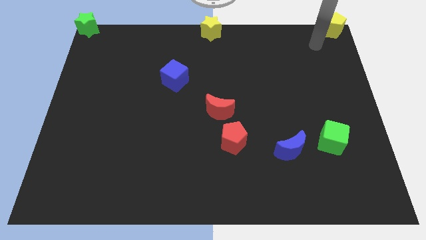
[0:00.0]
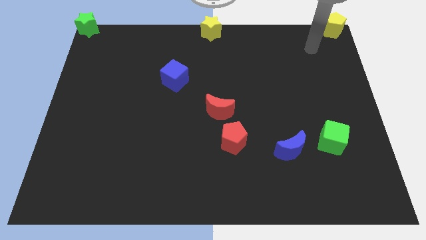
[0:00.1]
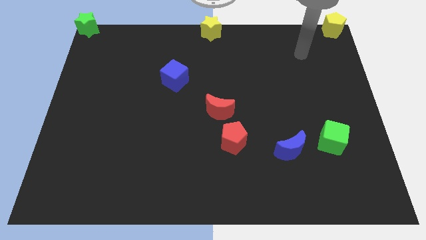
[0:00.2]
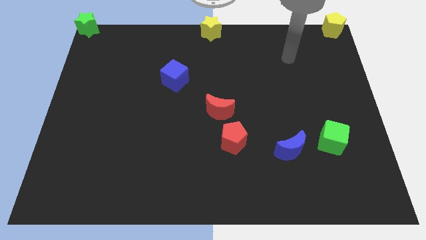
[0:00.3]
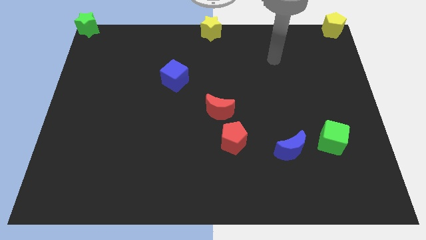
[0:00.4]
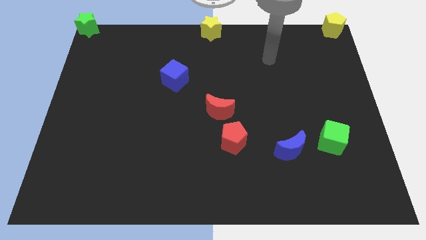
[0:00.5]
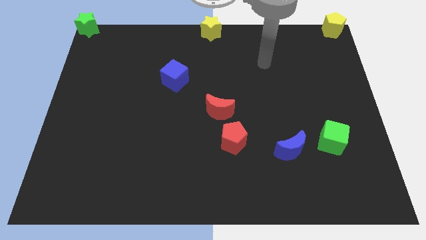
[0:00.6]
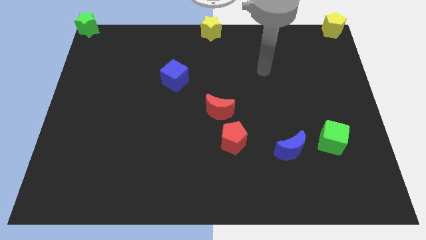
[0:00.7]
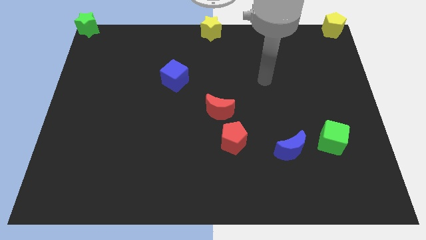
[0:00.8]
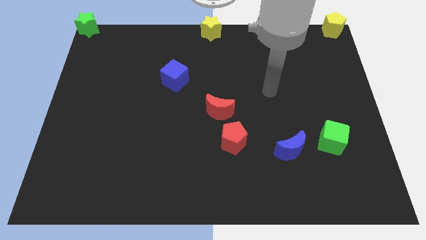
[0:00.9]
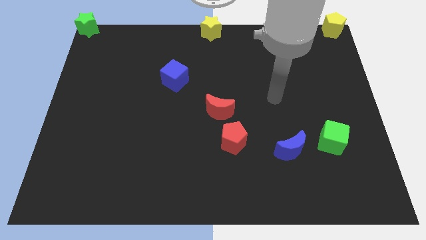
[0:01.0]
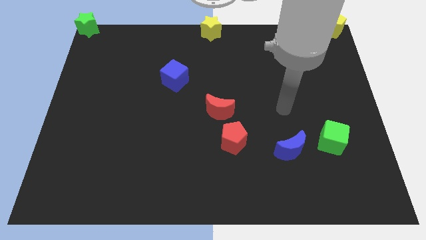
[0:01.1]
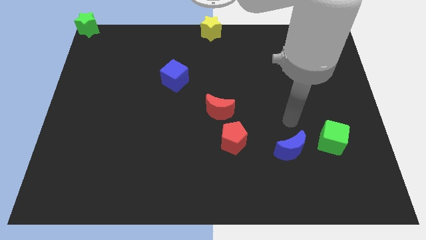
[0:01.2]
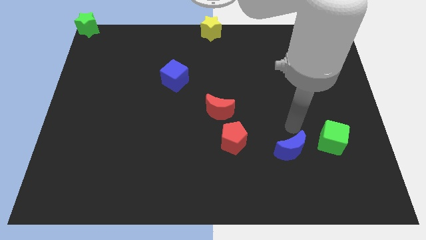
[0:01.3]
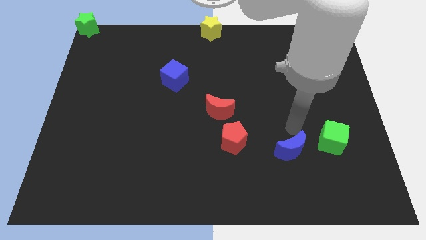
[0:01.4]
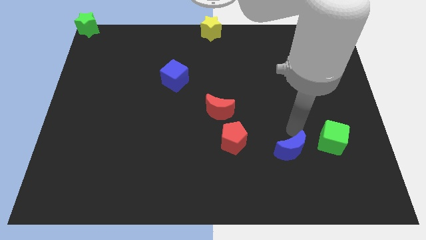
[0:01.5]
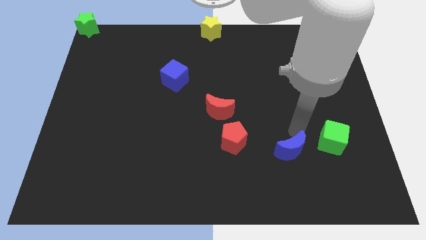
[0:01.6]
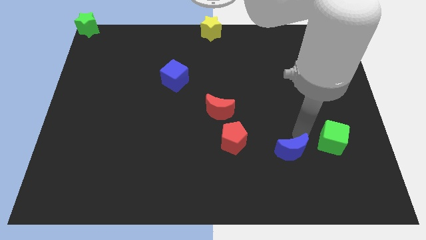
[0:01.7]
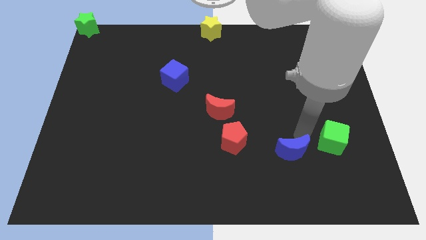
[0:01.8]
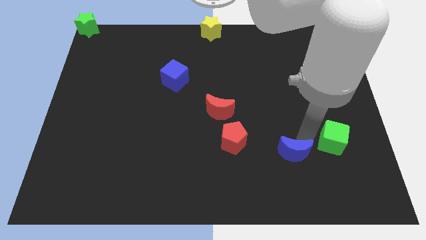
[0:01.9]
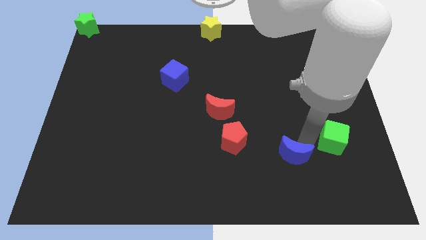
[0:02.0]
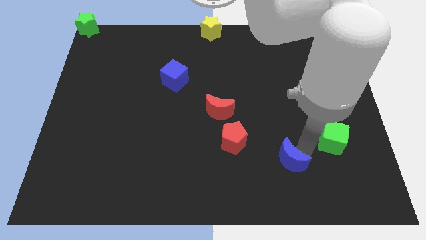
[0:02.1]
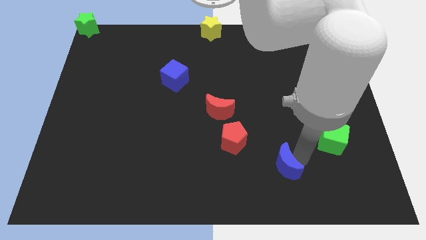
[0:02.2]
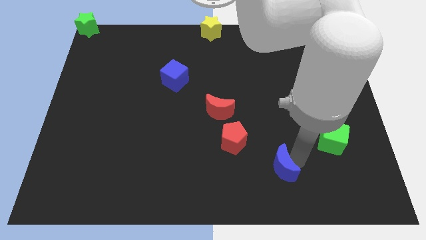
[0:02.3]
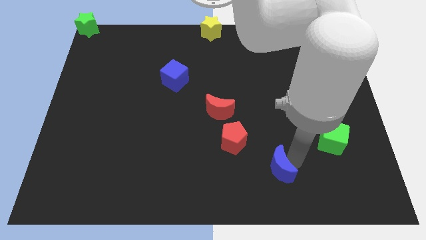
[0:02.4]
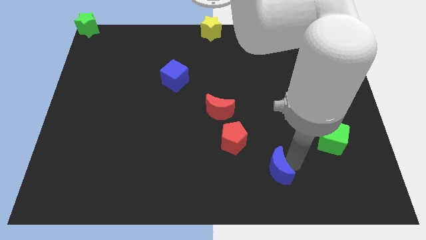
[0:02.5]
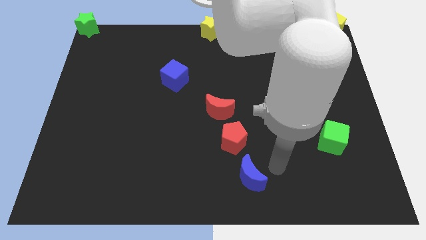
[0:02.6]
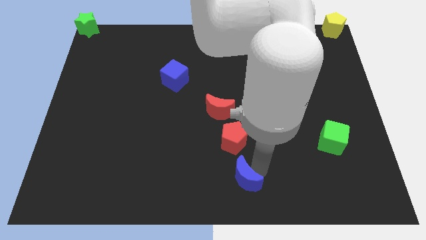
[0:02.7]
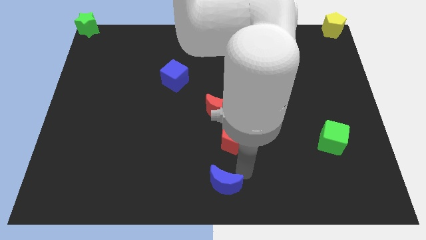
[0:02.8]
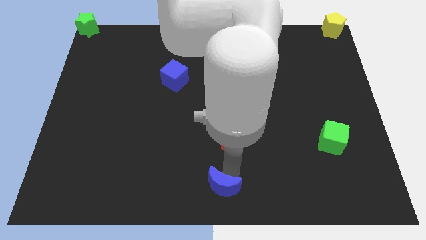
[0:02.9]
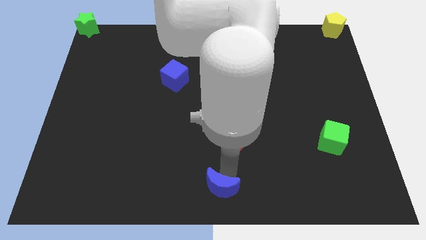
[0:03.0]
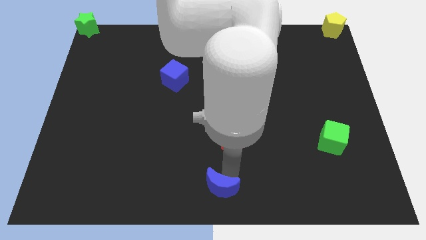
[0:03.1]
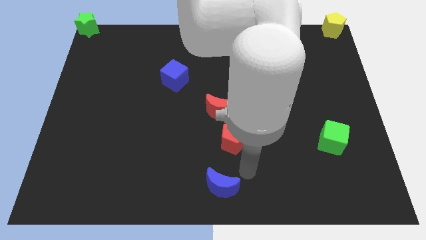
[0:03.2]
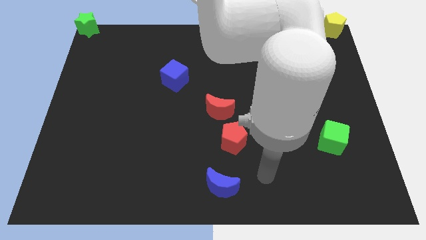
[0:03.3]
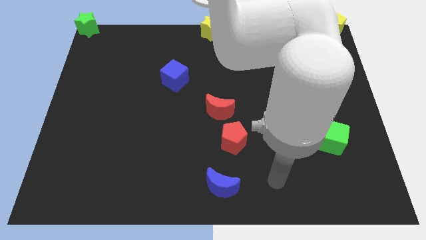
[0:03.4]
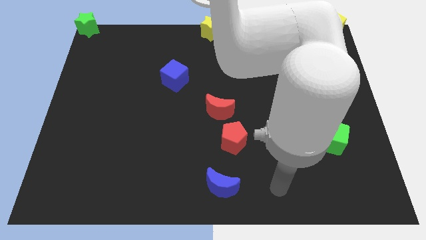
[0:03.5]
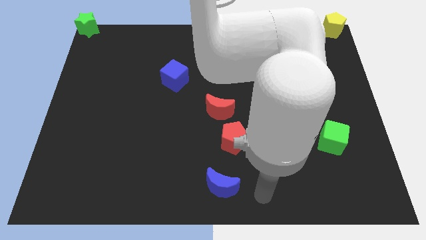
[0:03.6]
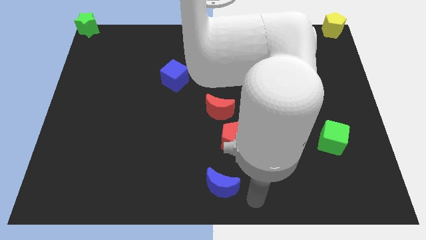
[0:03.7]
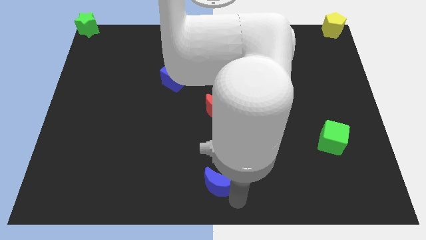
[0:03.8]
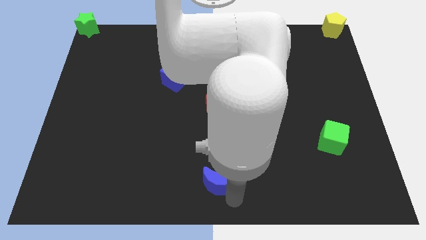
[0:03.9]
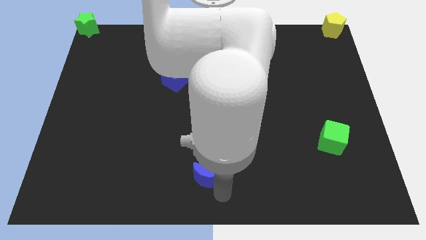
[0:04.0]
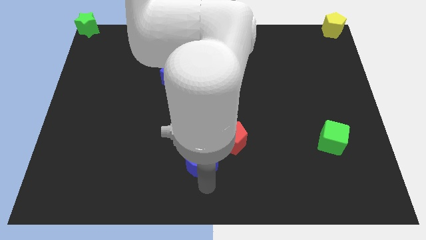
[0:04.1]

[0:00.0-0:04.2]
place the blue moon below the red pentagon

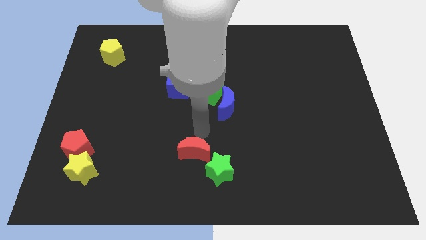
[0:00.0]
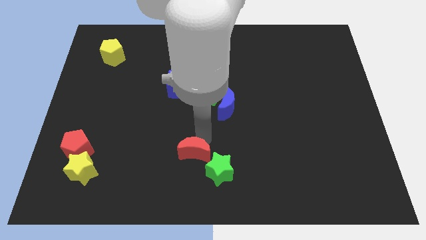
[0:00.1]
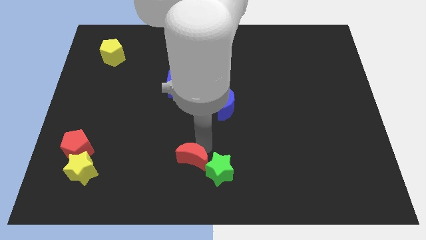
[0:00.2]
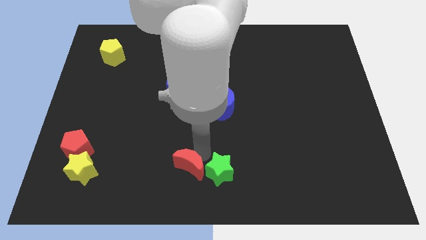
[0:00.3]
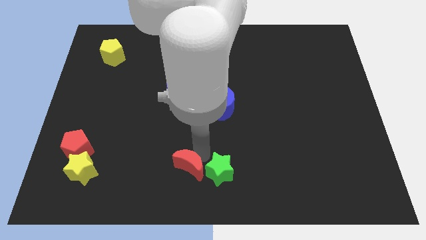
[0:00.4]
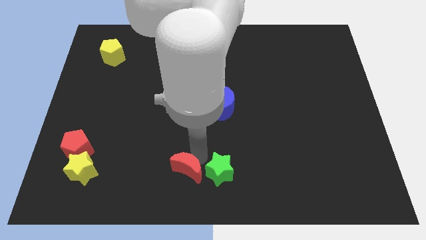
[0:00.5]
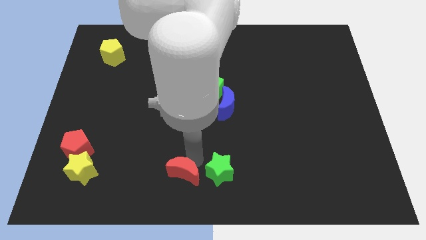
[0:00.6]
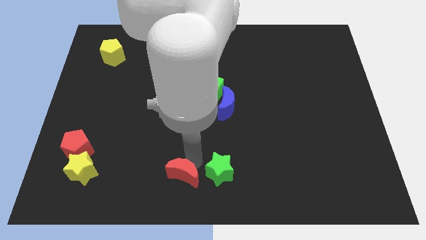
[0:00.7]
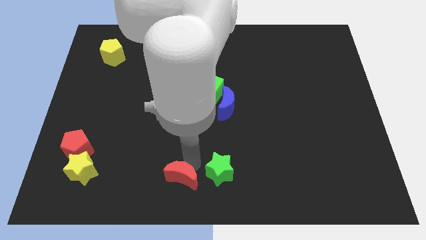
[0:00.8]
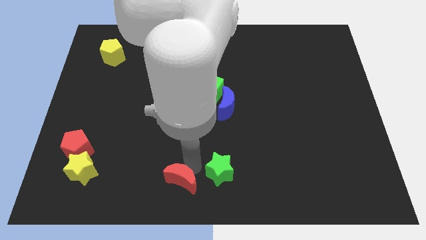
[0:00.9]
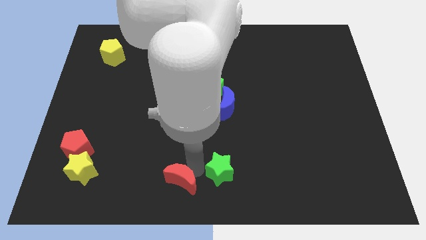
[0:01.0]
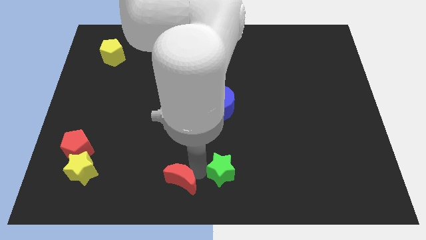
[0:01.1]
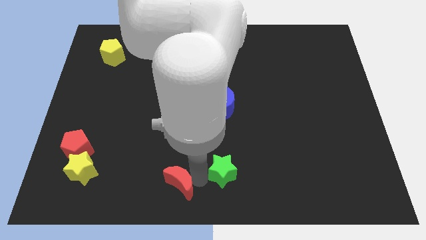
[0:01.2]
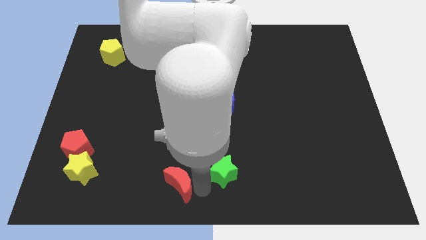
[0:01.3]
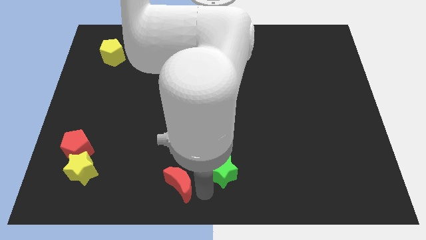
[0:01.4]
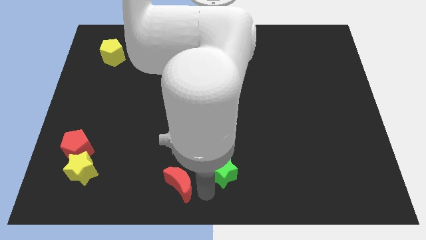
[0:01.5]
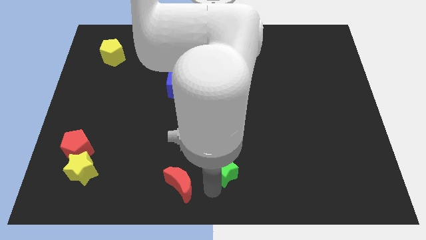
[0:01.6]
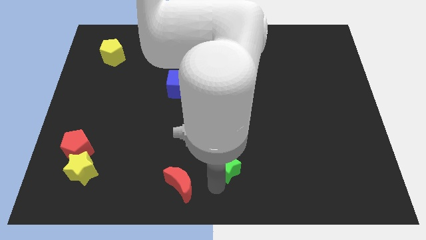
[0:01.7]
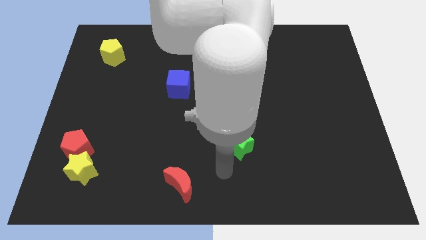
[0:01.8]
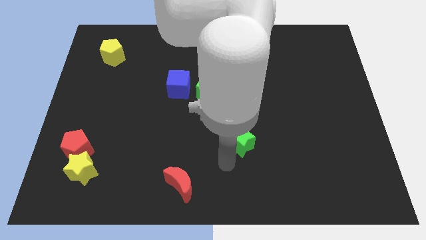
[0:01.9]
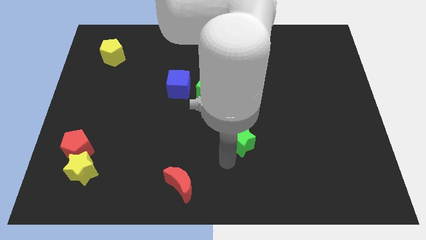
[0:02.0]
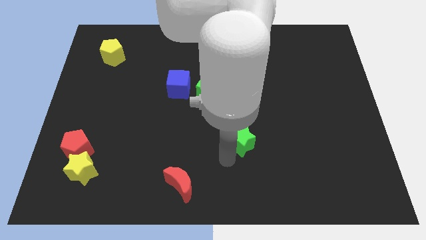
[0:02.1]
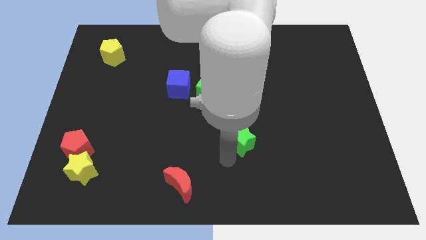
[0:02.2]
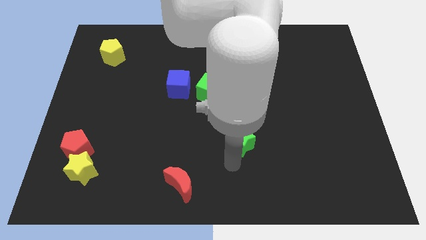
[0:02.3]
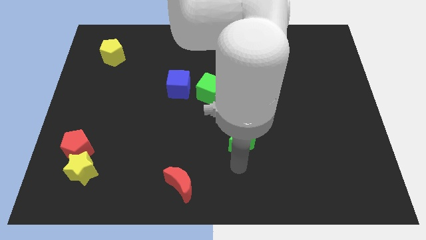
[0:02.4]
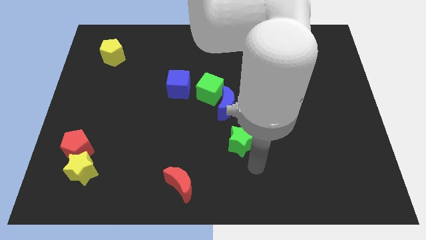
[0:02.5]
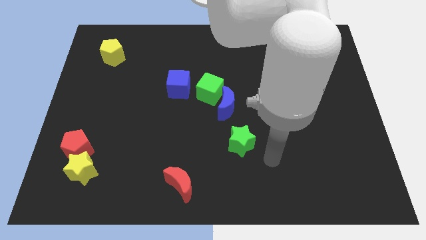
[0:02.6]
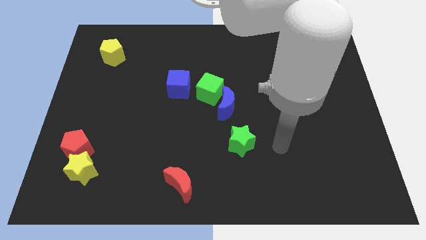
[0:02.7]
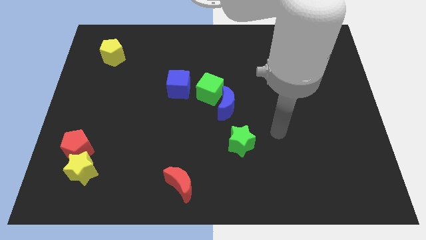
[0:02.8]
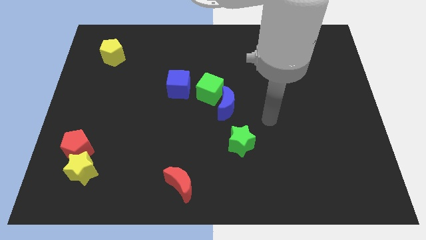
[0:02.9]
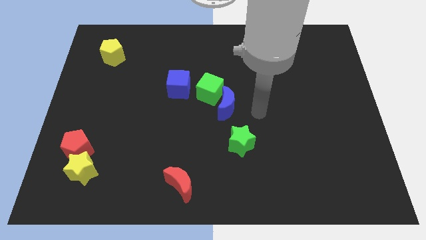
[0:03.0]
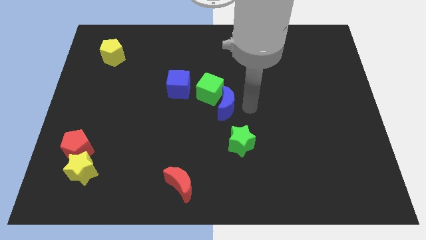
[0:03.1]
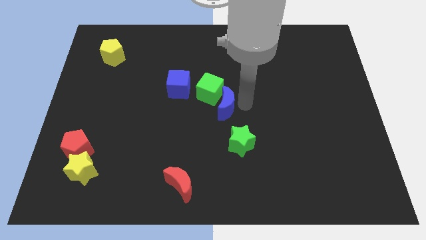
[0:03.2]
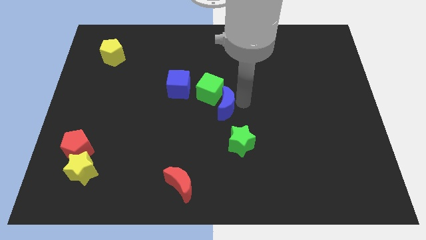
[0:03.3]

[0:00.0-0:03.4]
place green star diagonally to the right side of the blue crescent

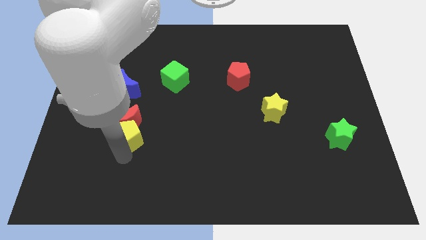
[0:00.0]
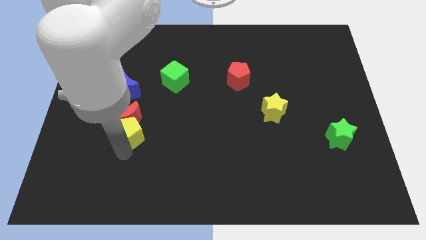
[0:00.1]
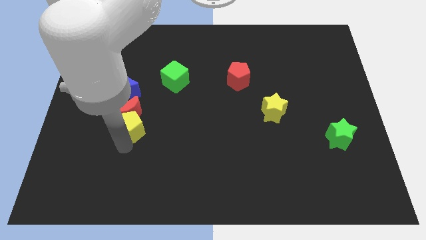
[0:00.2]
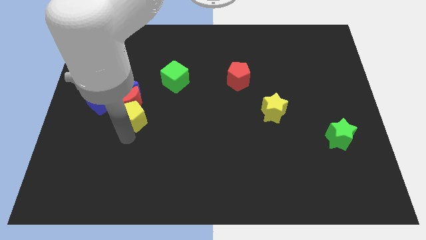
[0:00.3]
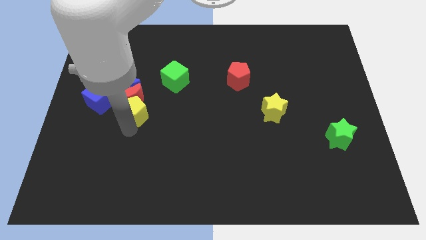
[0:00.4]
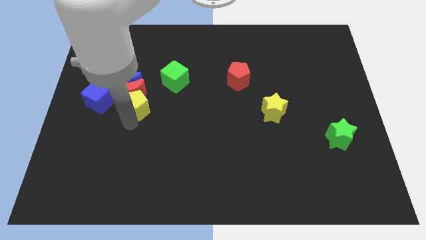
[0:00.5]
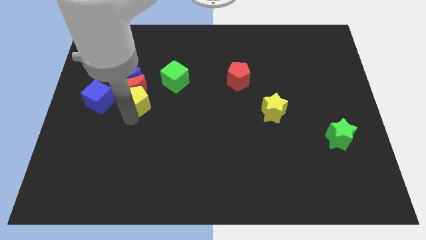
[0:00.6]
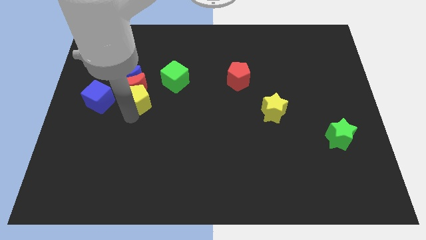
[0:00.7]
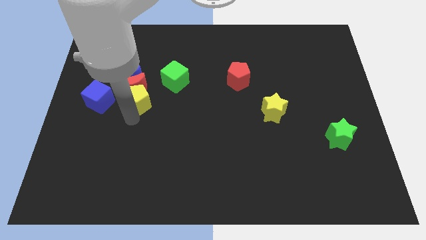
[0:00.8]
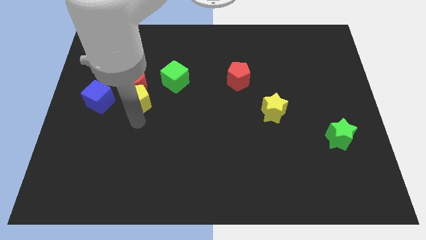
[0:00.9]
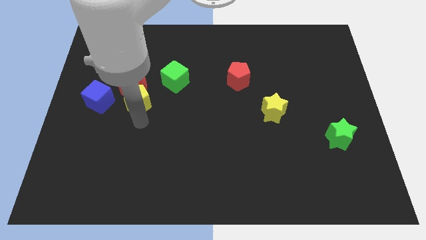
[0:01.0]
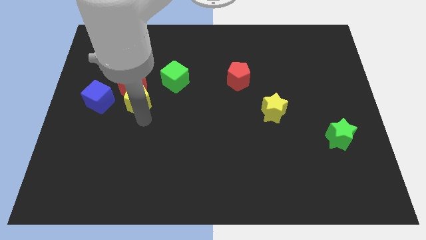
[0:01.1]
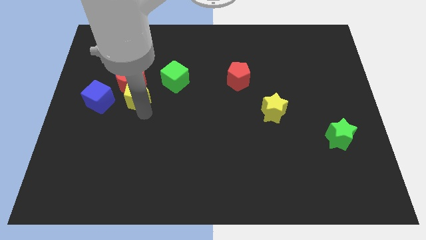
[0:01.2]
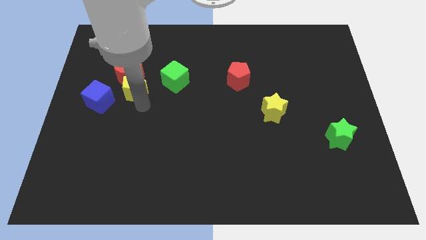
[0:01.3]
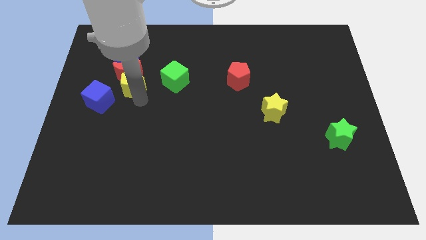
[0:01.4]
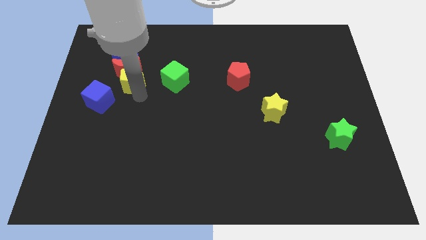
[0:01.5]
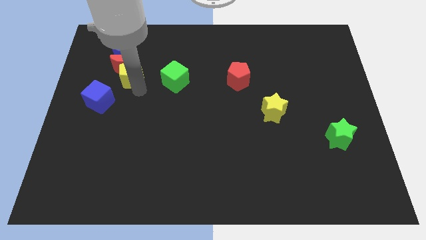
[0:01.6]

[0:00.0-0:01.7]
push yellow pentagon and red crescent into the blue crescent towards the top
